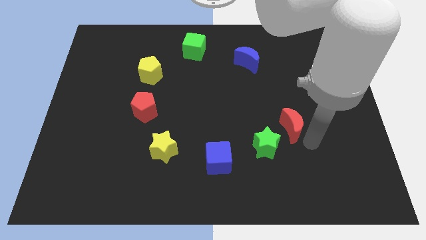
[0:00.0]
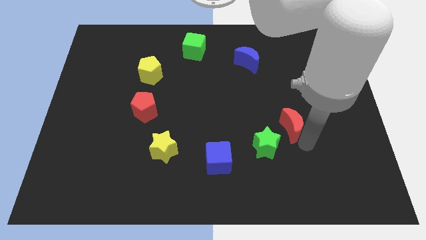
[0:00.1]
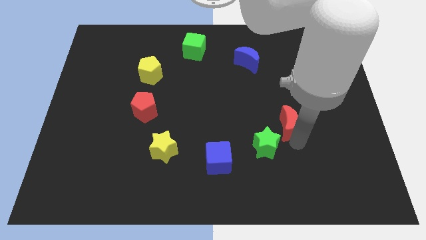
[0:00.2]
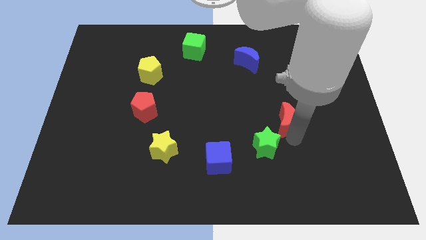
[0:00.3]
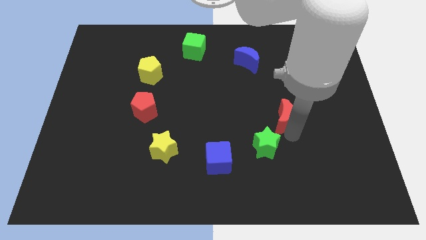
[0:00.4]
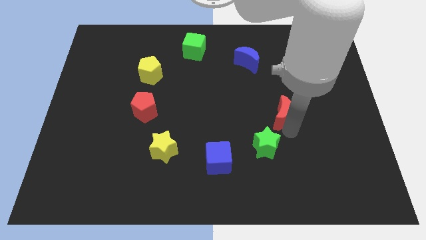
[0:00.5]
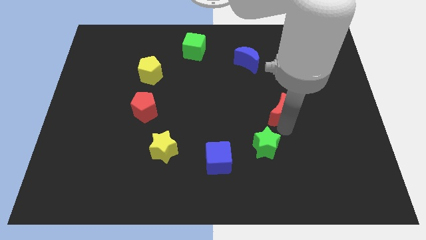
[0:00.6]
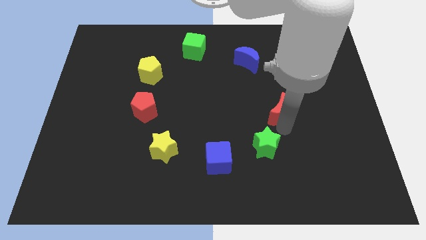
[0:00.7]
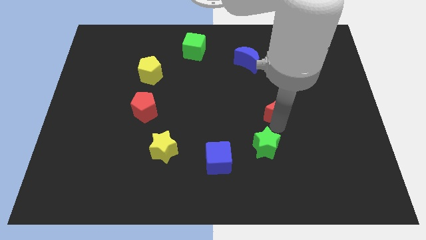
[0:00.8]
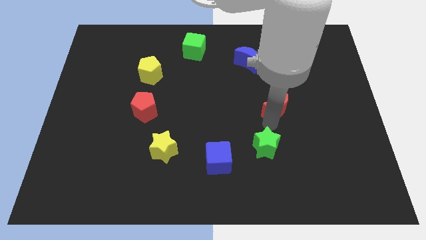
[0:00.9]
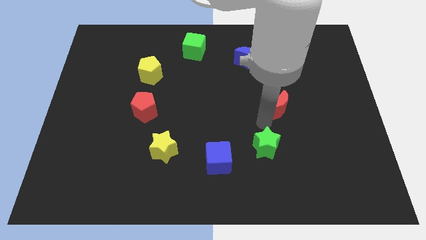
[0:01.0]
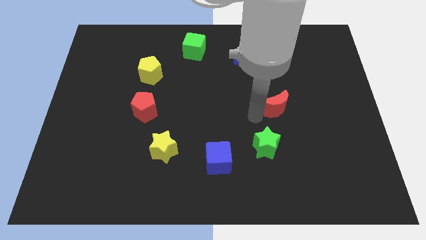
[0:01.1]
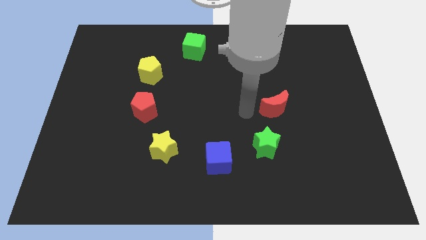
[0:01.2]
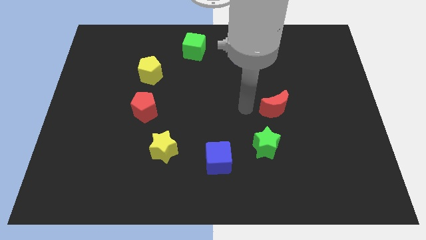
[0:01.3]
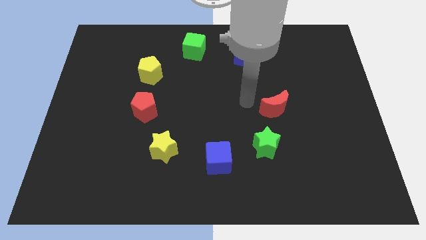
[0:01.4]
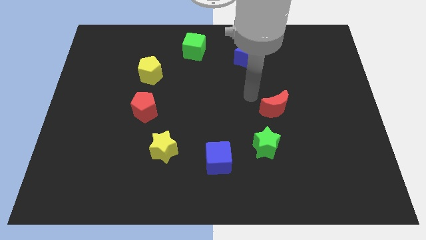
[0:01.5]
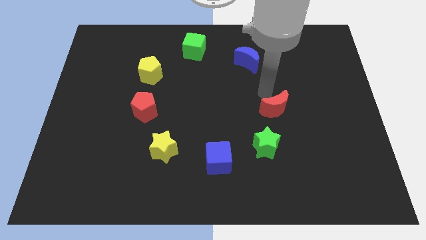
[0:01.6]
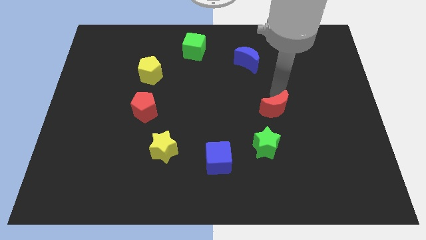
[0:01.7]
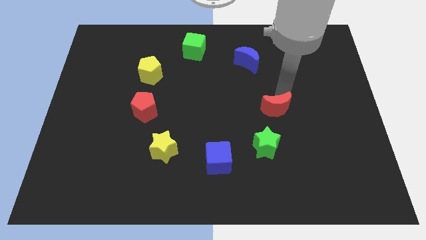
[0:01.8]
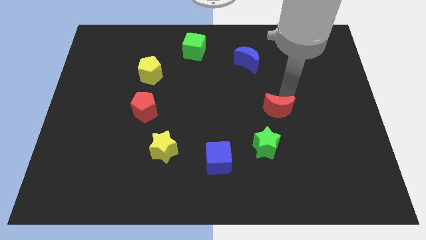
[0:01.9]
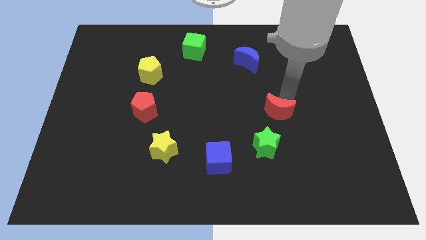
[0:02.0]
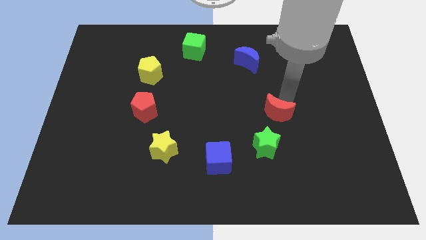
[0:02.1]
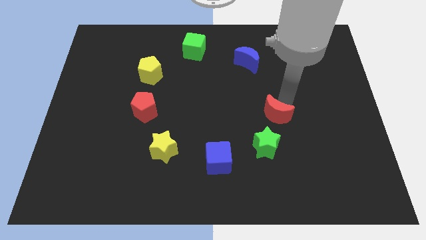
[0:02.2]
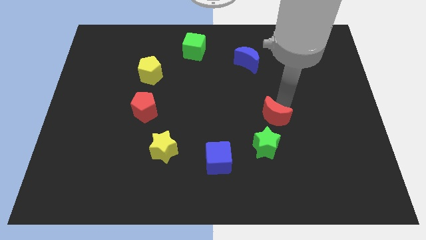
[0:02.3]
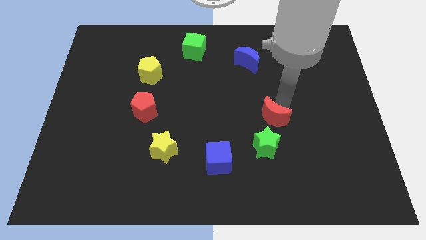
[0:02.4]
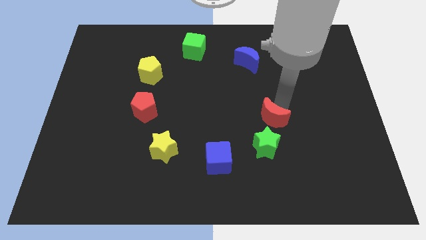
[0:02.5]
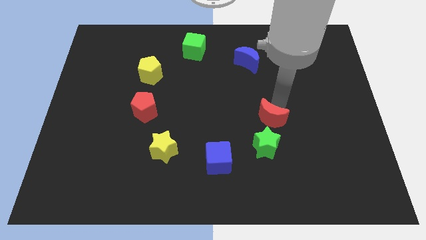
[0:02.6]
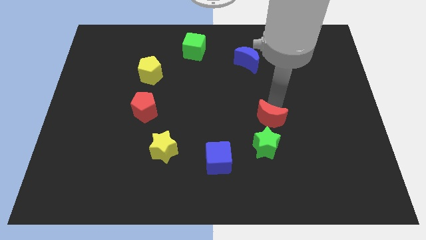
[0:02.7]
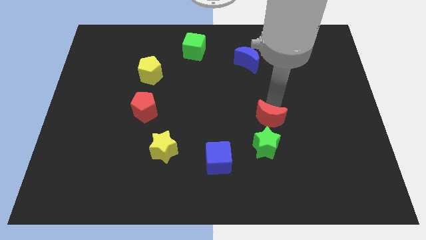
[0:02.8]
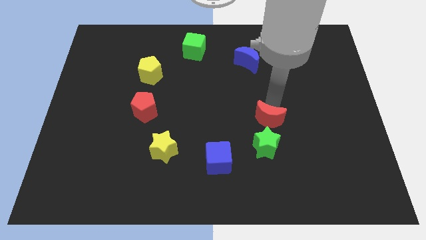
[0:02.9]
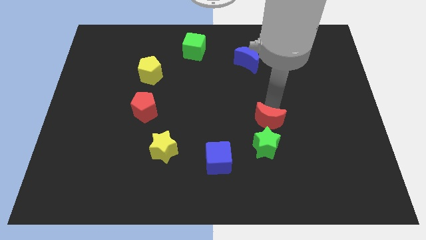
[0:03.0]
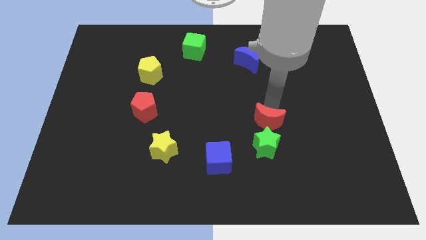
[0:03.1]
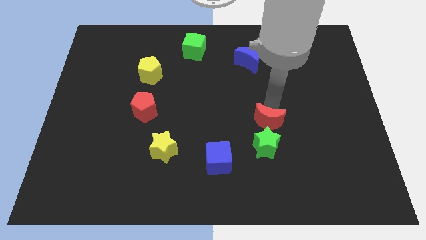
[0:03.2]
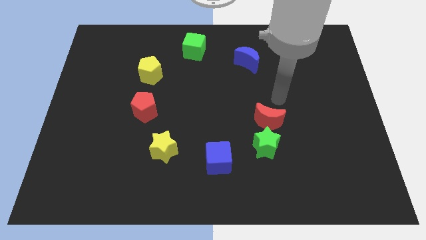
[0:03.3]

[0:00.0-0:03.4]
slightly move the red moon down
